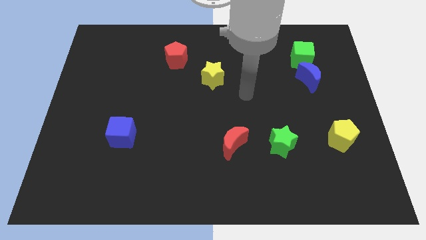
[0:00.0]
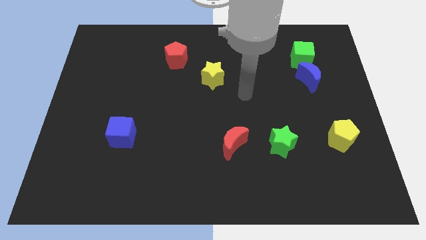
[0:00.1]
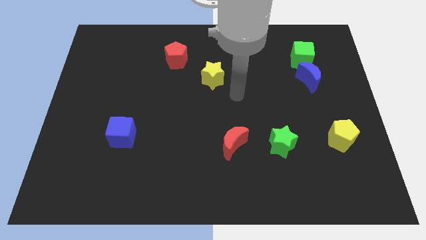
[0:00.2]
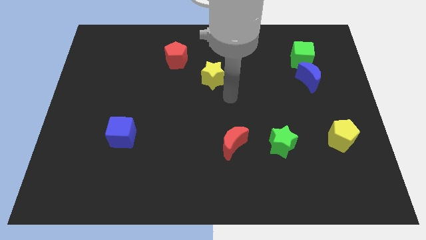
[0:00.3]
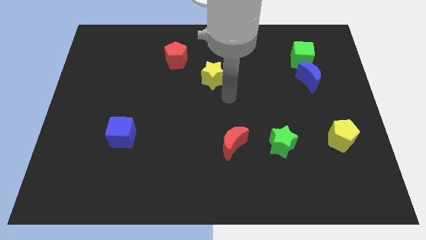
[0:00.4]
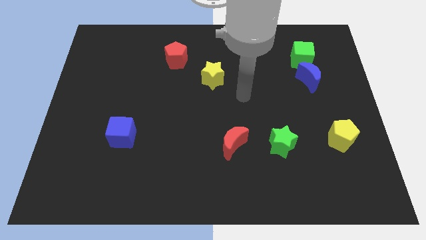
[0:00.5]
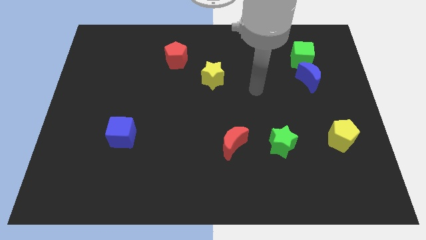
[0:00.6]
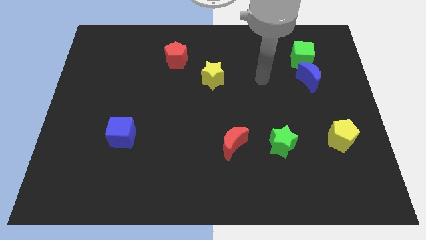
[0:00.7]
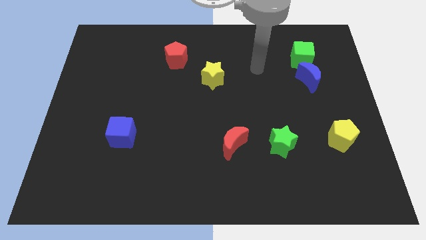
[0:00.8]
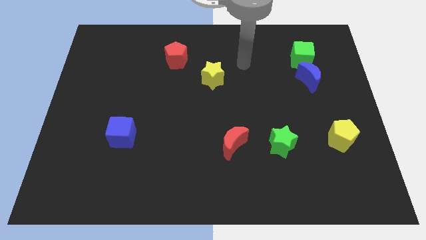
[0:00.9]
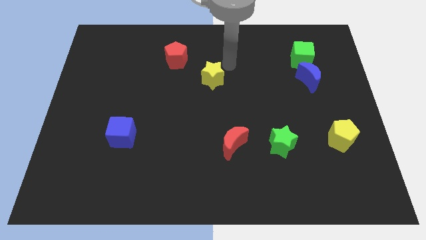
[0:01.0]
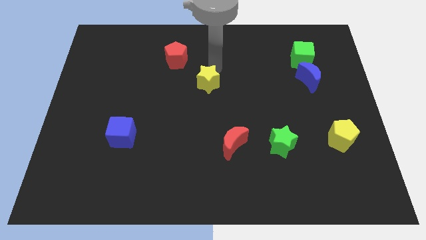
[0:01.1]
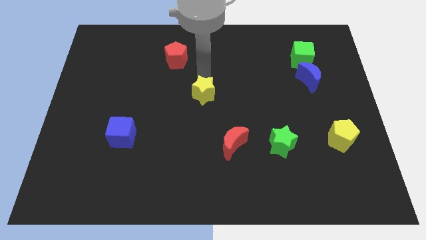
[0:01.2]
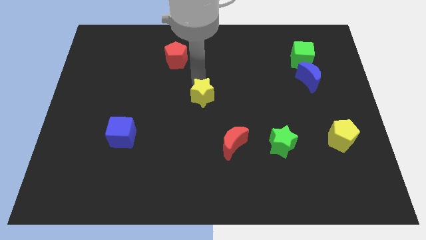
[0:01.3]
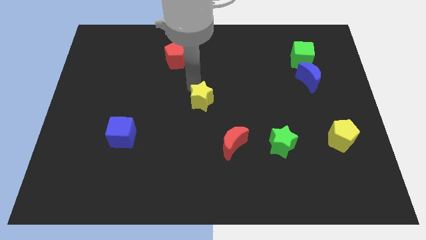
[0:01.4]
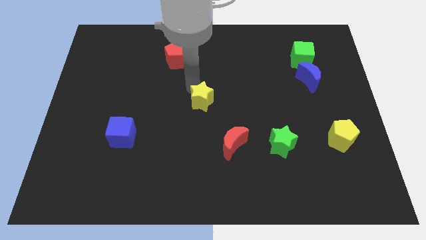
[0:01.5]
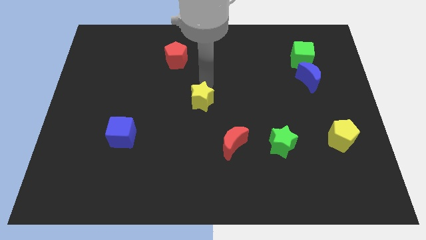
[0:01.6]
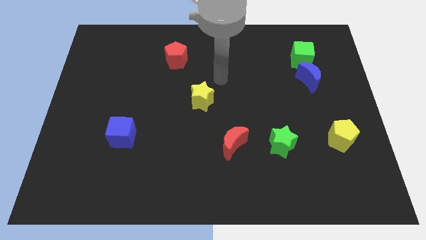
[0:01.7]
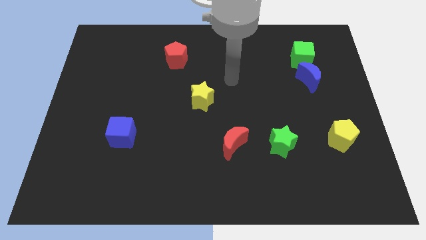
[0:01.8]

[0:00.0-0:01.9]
place the yellow star on the centre of the board

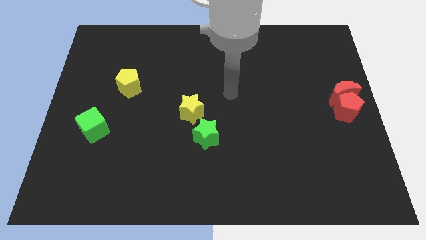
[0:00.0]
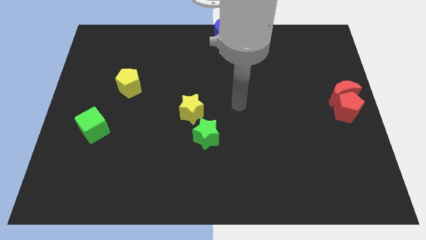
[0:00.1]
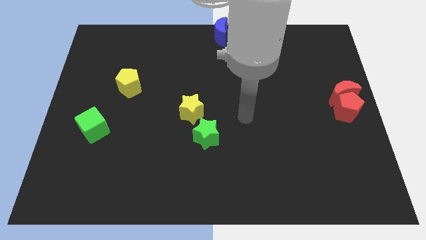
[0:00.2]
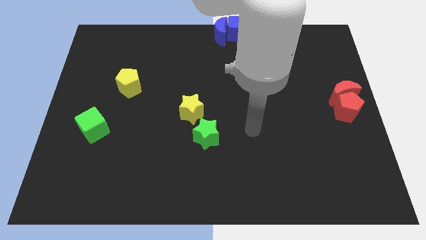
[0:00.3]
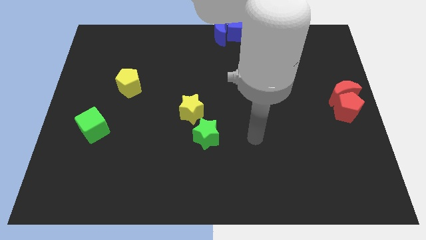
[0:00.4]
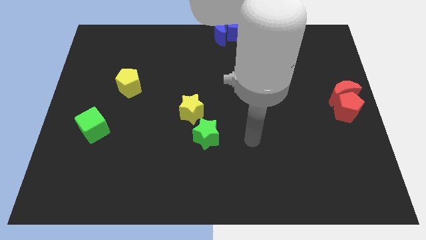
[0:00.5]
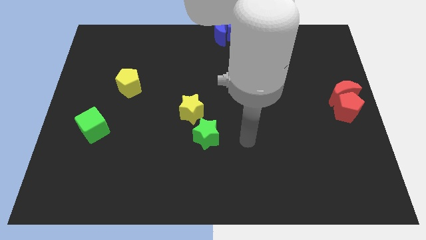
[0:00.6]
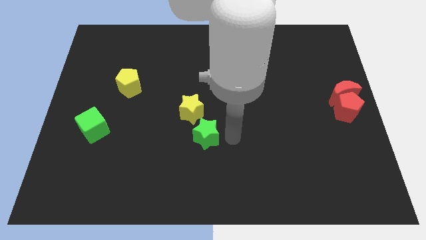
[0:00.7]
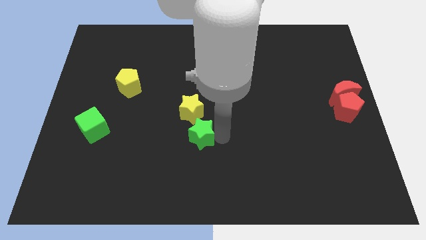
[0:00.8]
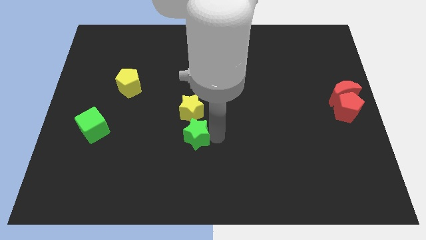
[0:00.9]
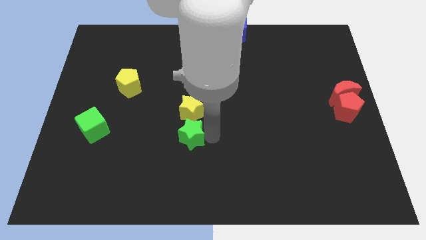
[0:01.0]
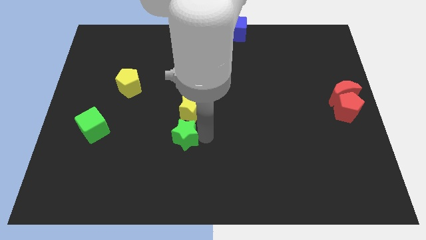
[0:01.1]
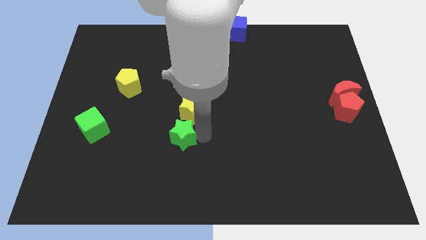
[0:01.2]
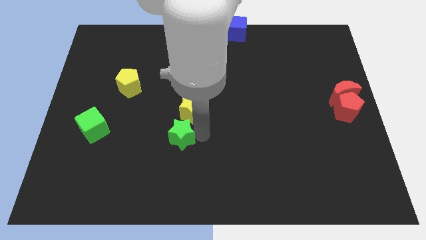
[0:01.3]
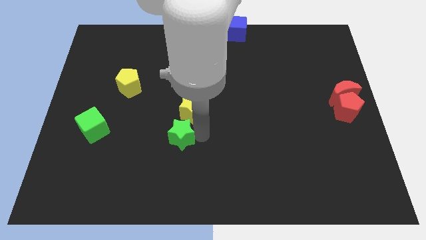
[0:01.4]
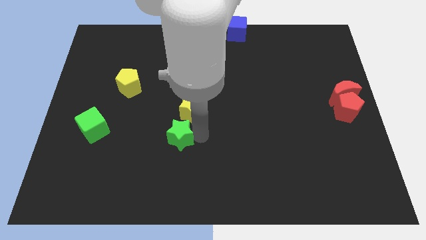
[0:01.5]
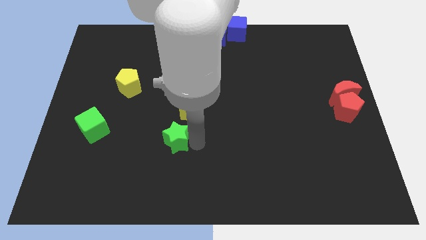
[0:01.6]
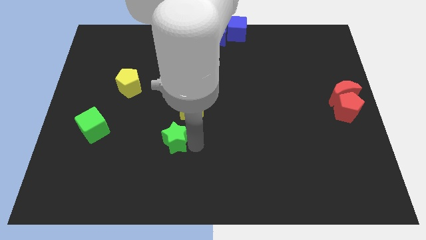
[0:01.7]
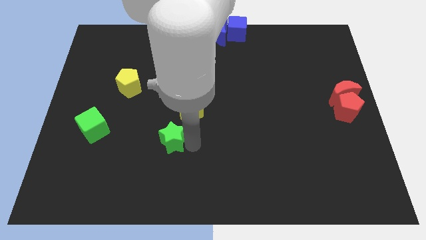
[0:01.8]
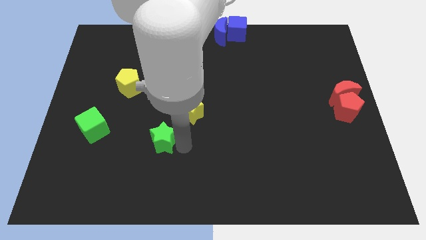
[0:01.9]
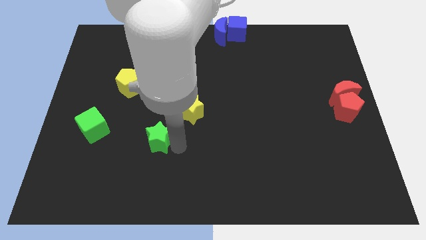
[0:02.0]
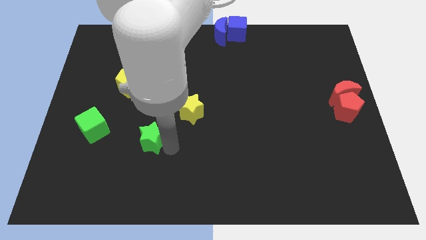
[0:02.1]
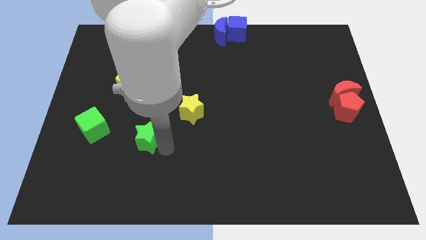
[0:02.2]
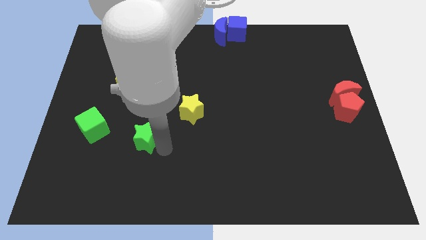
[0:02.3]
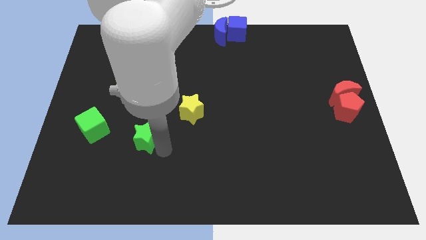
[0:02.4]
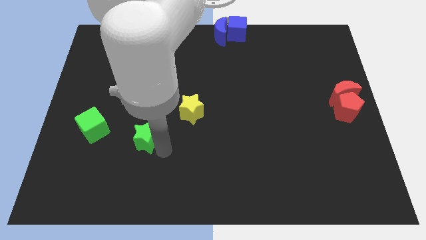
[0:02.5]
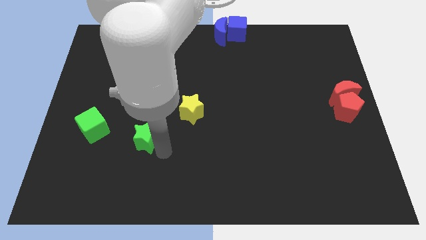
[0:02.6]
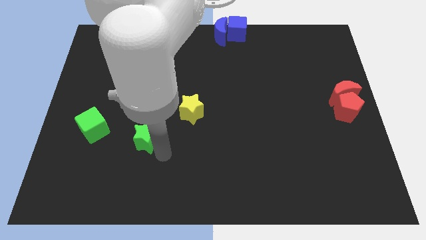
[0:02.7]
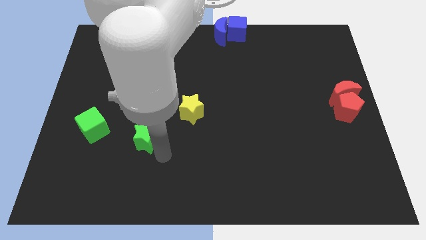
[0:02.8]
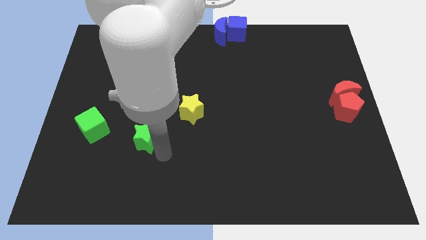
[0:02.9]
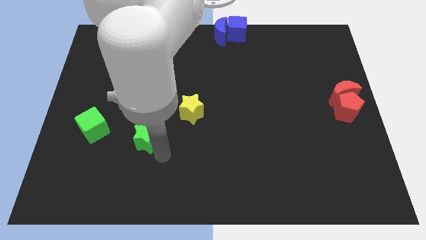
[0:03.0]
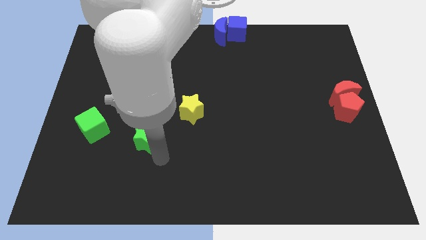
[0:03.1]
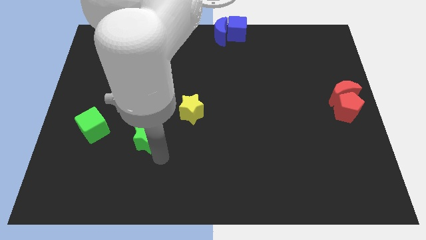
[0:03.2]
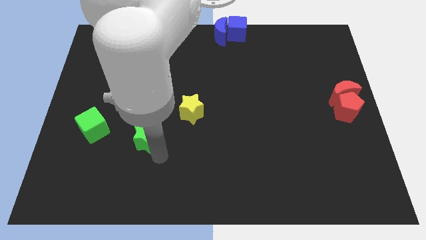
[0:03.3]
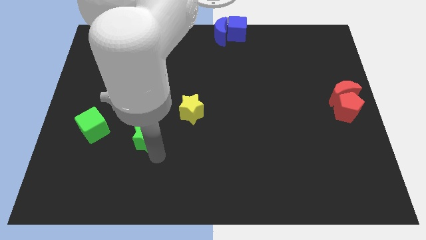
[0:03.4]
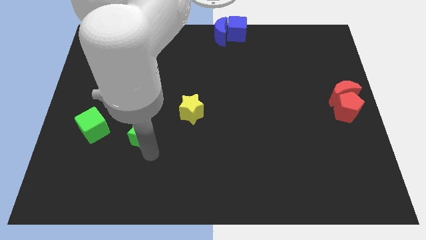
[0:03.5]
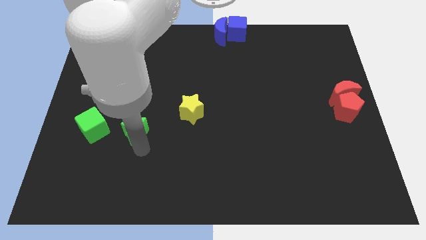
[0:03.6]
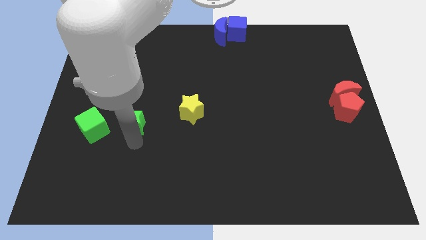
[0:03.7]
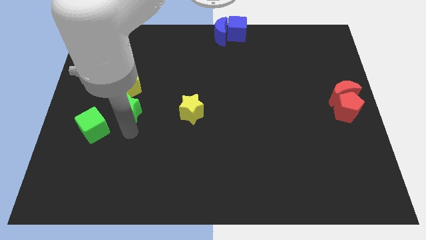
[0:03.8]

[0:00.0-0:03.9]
place the green star between the green cube and yellow star

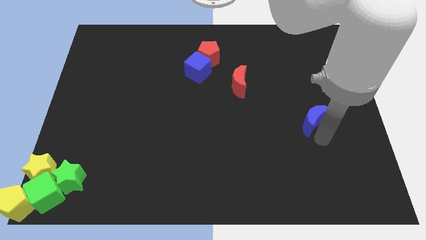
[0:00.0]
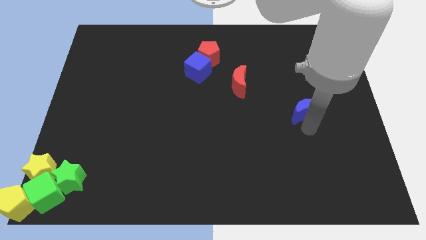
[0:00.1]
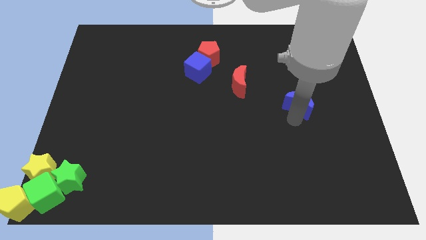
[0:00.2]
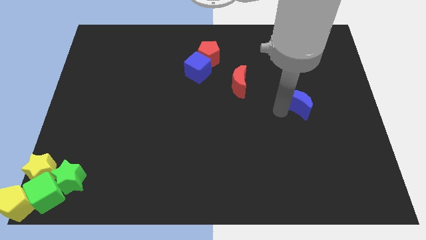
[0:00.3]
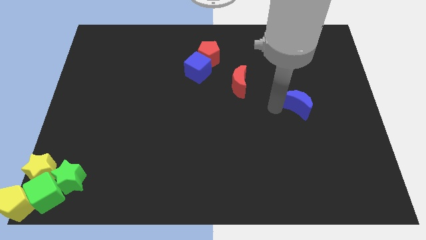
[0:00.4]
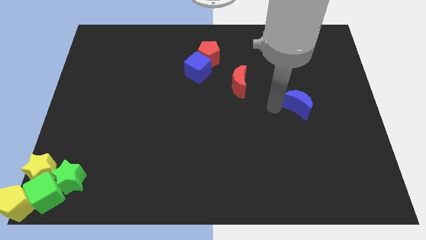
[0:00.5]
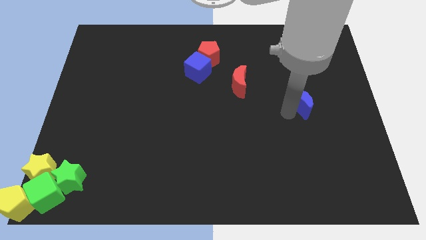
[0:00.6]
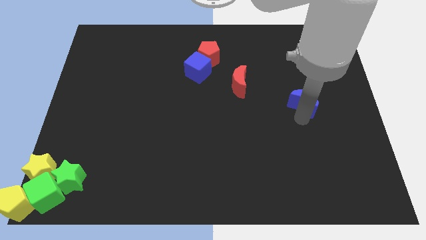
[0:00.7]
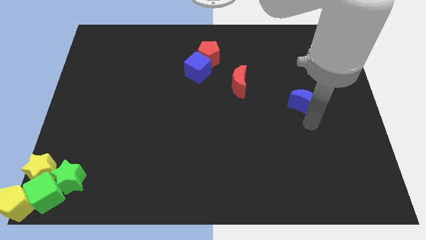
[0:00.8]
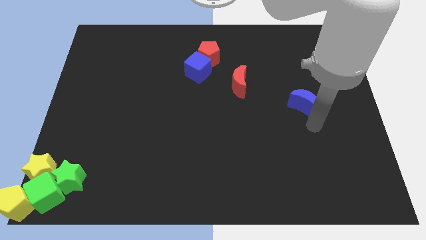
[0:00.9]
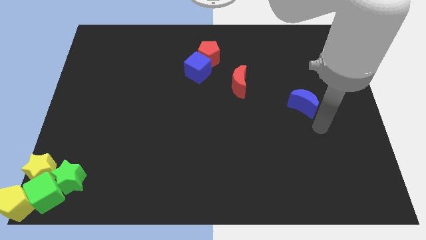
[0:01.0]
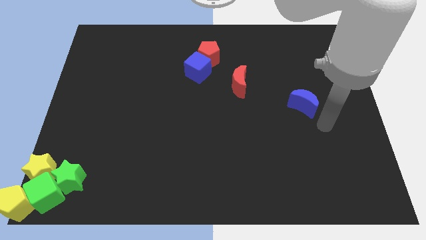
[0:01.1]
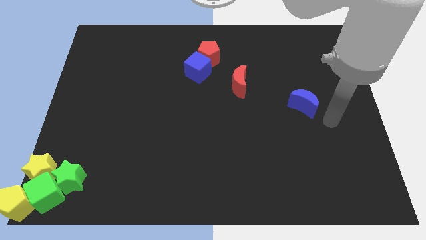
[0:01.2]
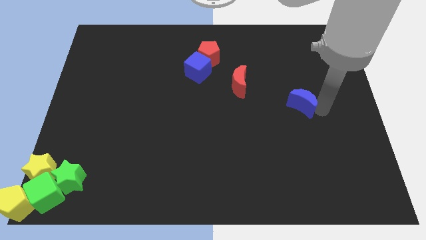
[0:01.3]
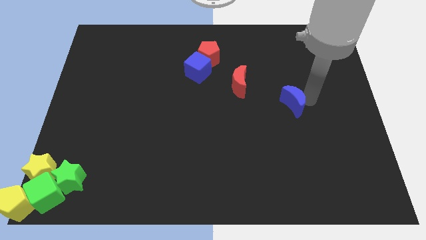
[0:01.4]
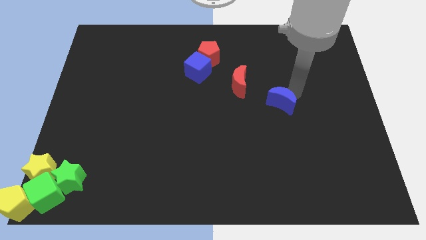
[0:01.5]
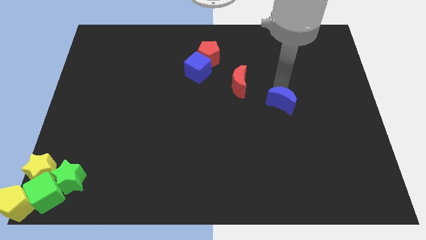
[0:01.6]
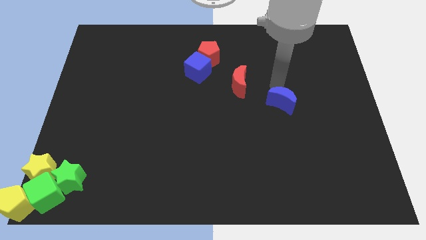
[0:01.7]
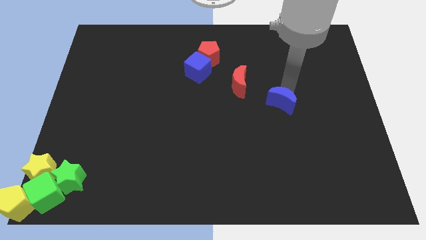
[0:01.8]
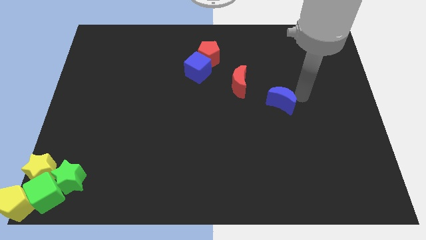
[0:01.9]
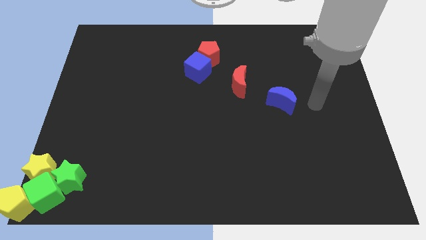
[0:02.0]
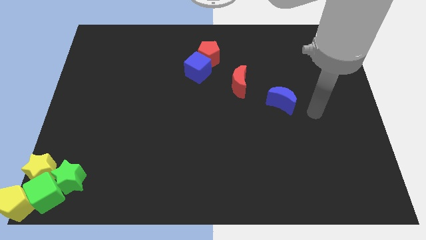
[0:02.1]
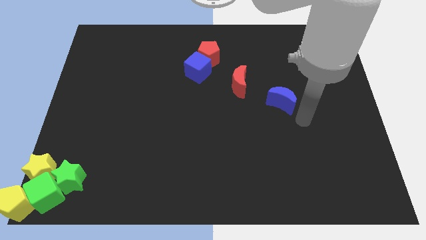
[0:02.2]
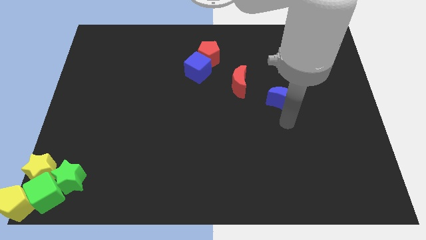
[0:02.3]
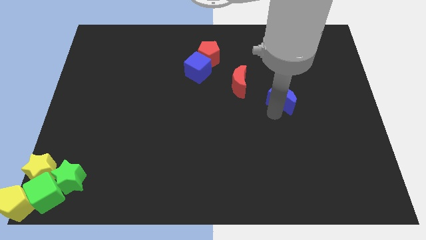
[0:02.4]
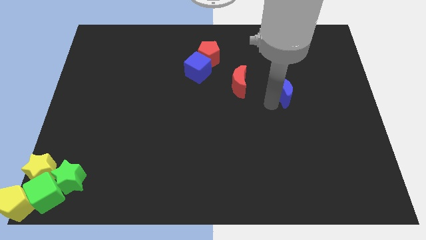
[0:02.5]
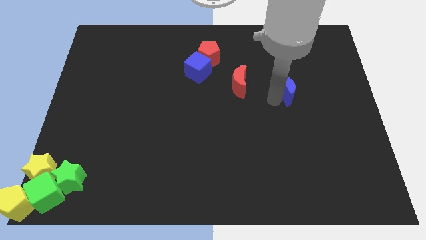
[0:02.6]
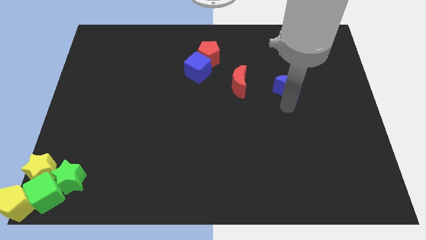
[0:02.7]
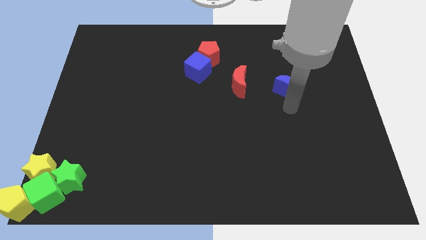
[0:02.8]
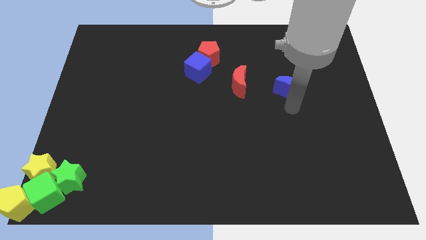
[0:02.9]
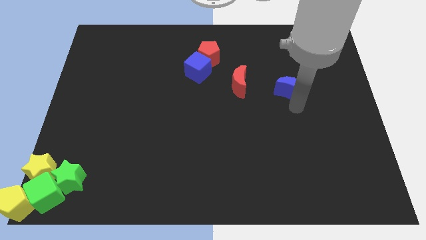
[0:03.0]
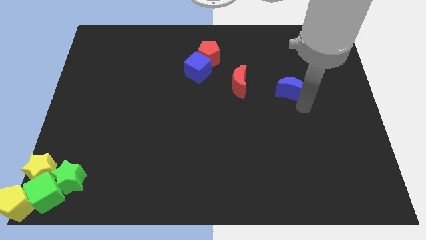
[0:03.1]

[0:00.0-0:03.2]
slightly move blue crescent towards the red crescent
